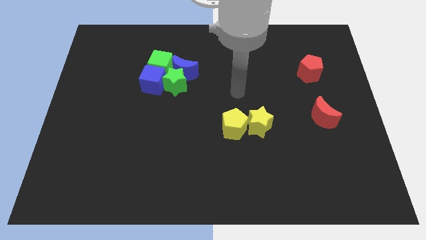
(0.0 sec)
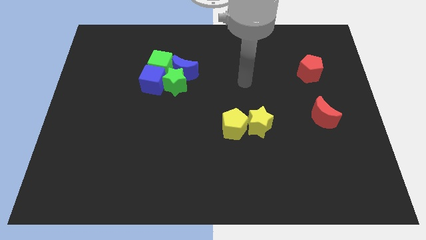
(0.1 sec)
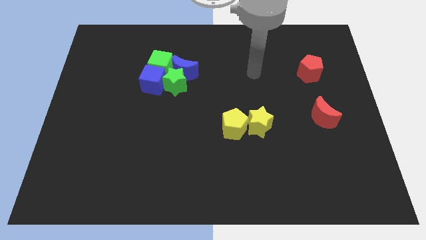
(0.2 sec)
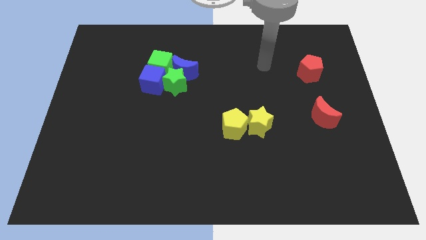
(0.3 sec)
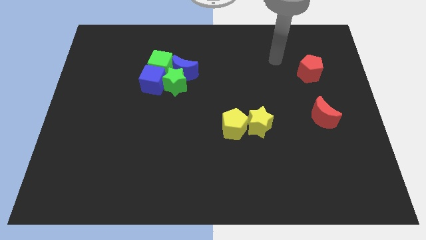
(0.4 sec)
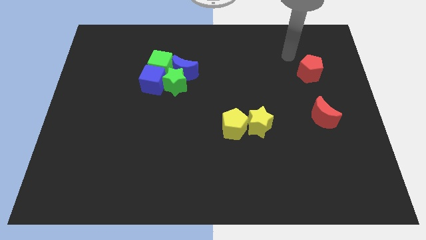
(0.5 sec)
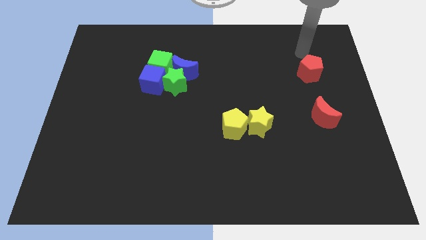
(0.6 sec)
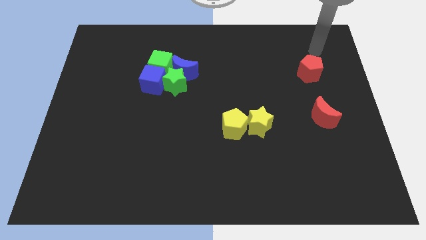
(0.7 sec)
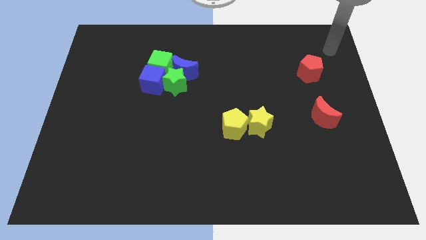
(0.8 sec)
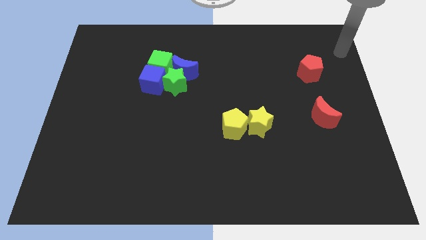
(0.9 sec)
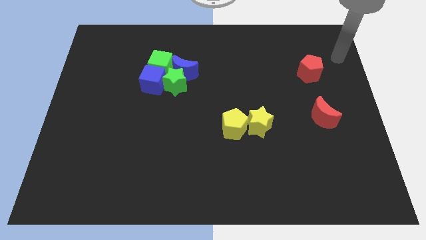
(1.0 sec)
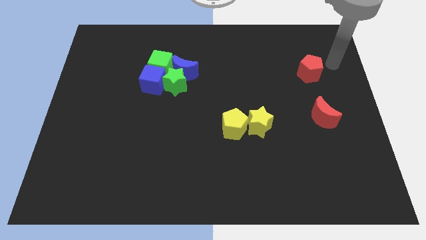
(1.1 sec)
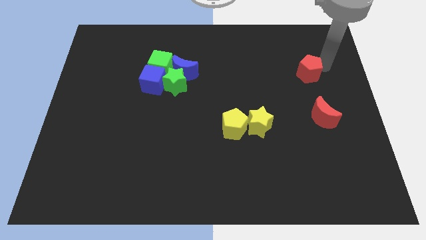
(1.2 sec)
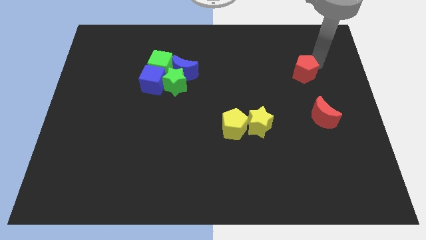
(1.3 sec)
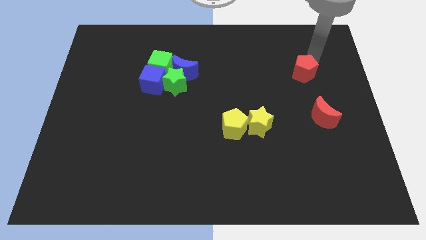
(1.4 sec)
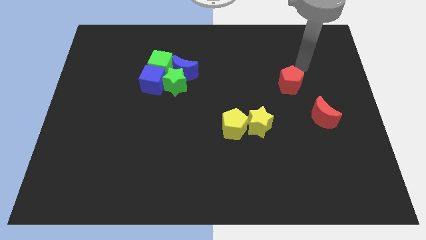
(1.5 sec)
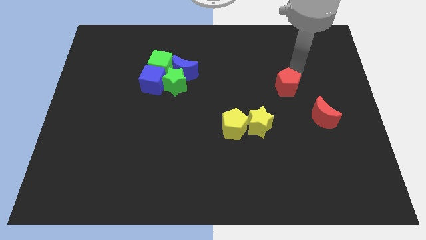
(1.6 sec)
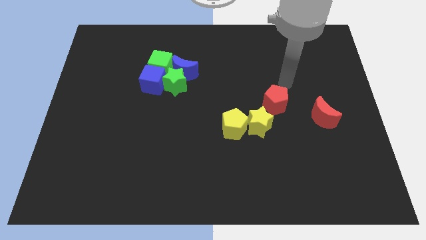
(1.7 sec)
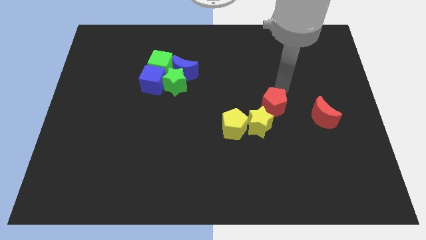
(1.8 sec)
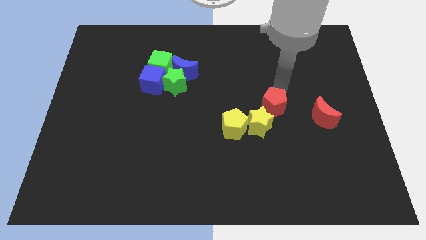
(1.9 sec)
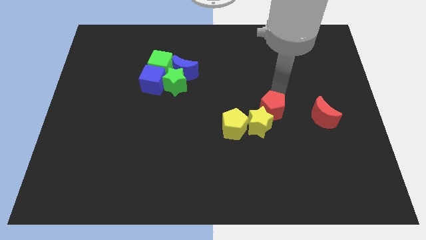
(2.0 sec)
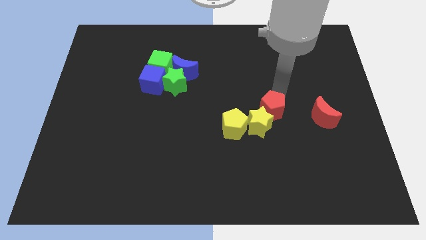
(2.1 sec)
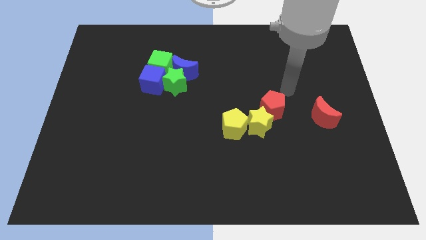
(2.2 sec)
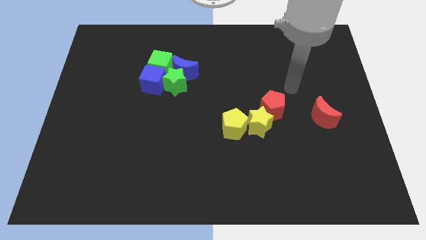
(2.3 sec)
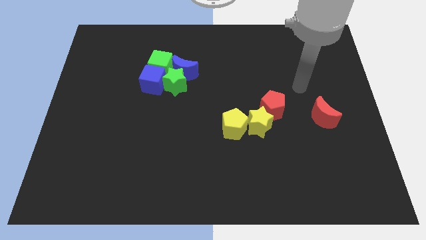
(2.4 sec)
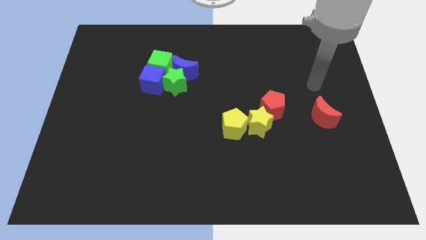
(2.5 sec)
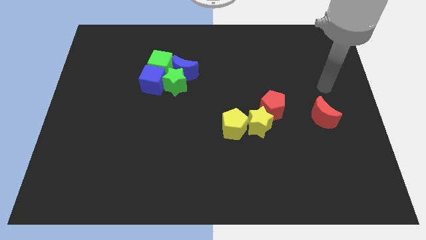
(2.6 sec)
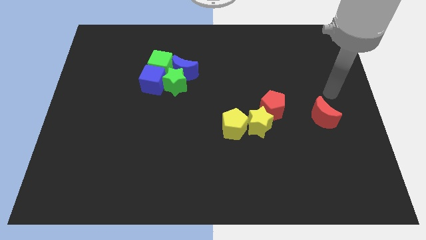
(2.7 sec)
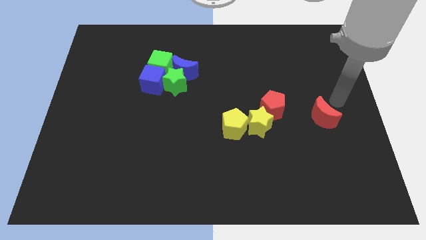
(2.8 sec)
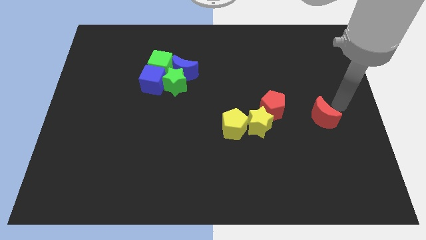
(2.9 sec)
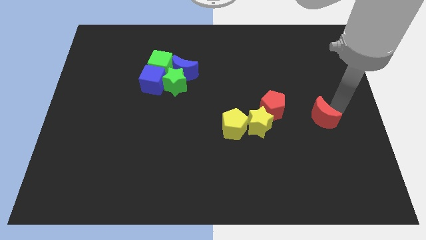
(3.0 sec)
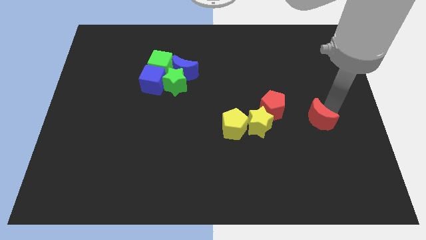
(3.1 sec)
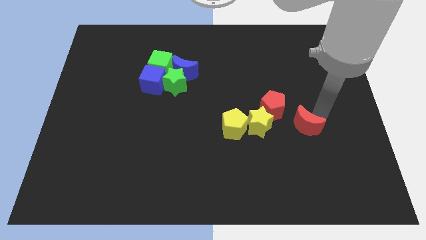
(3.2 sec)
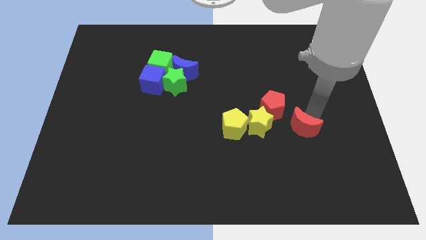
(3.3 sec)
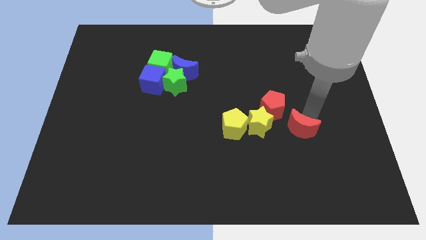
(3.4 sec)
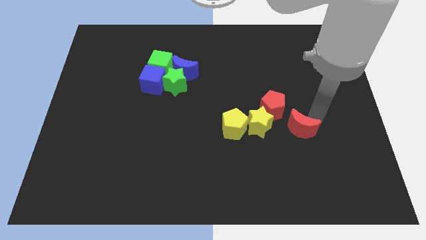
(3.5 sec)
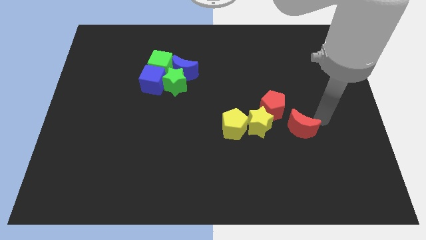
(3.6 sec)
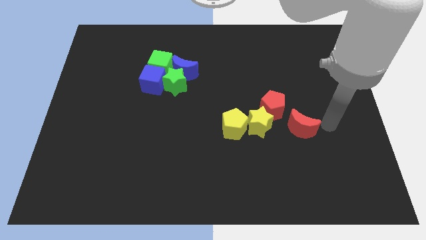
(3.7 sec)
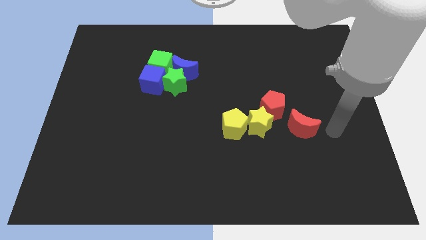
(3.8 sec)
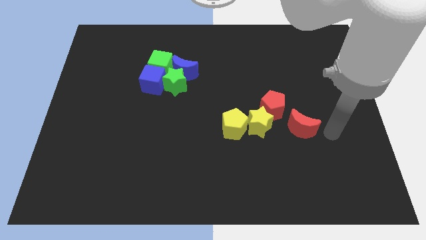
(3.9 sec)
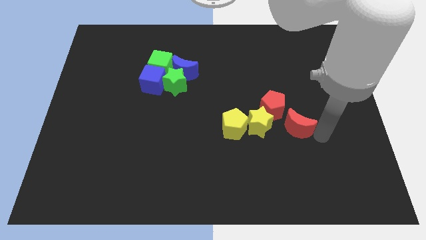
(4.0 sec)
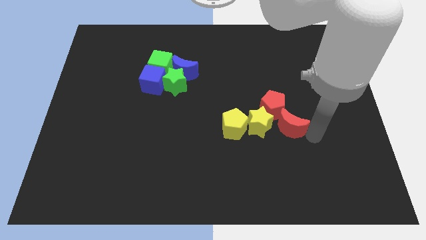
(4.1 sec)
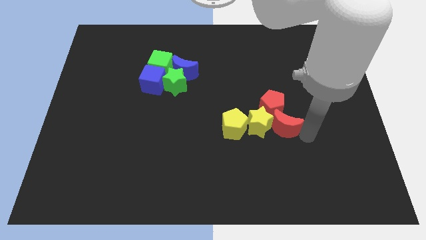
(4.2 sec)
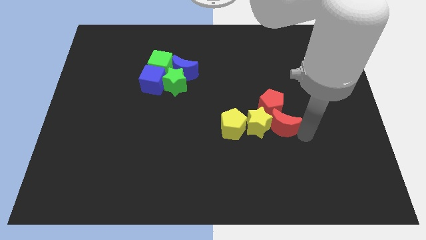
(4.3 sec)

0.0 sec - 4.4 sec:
slide the red crescent below to the red pentagon

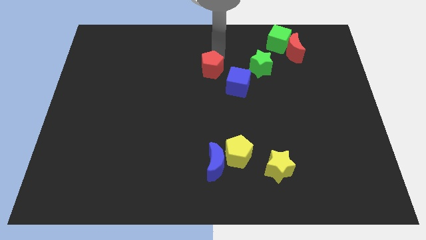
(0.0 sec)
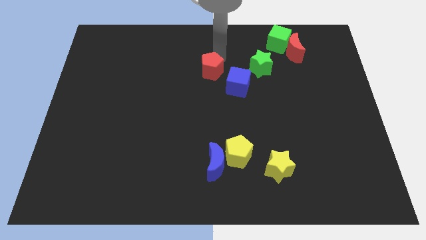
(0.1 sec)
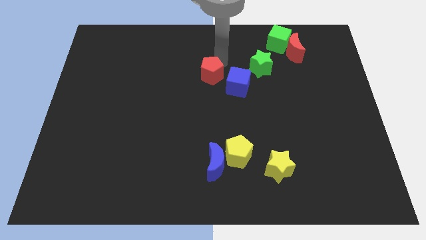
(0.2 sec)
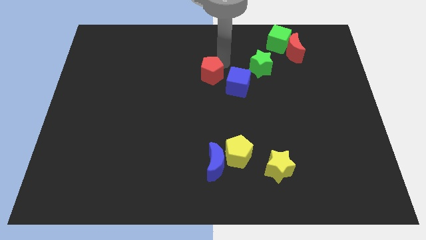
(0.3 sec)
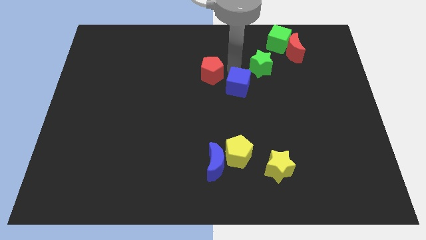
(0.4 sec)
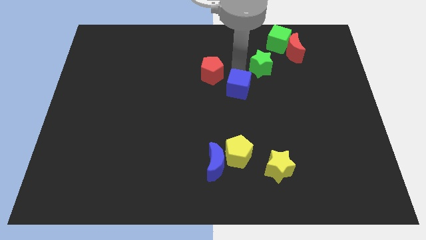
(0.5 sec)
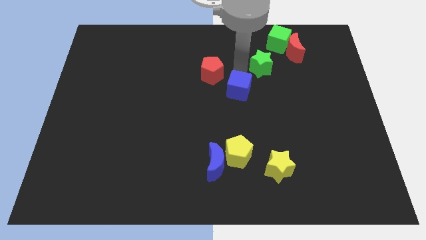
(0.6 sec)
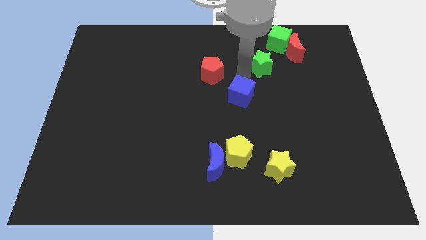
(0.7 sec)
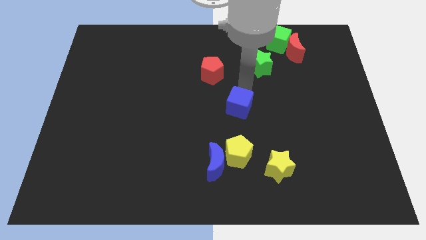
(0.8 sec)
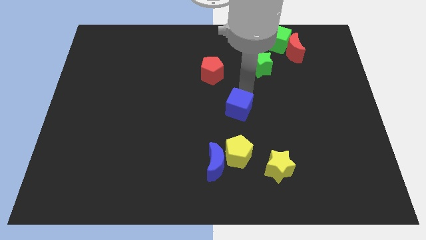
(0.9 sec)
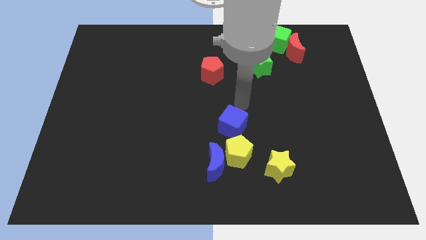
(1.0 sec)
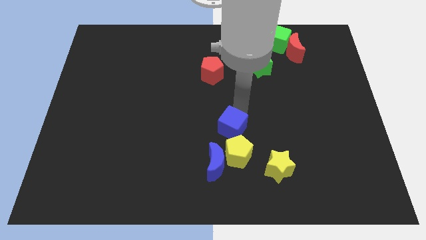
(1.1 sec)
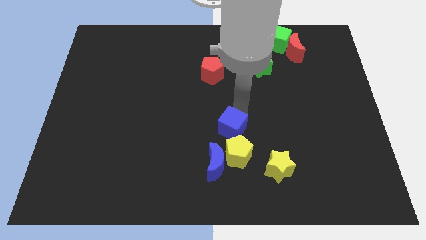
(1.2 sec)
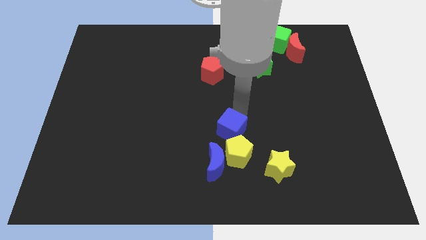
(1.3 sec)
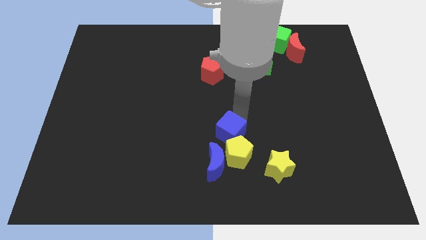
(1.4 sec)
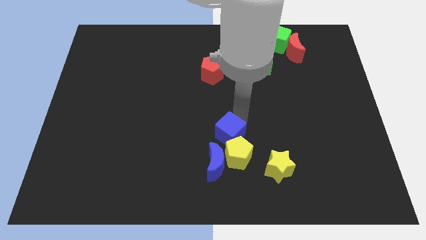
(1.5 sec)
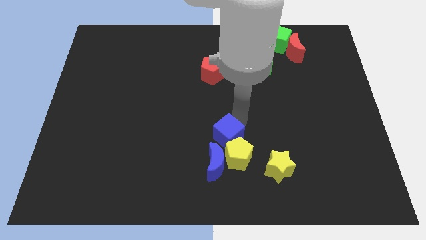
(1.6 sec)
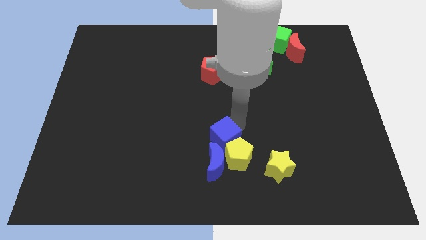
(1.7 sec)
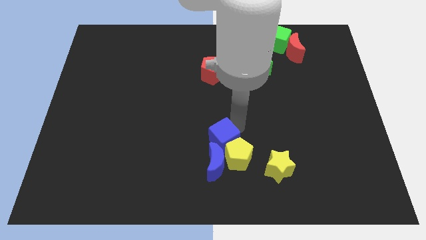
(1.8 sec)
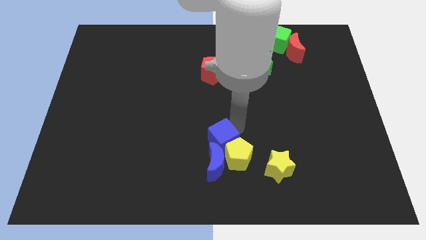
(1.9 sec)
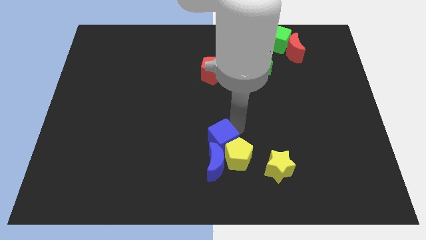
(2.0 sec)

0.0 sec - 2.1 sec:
place blue cube into blue moon and yellow pentagon

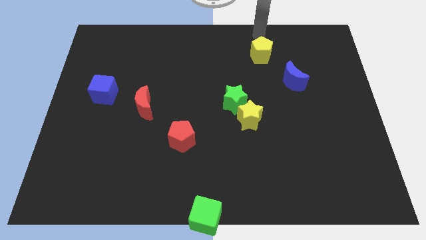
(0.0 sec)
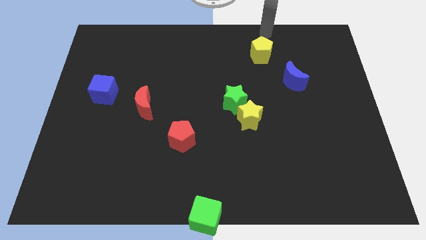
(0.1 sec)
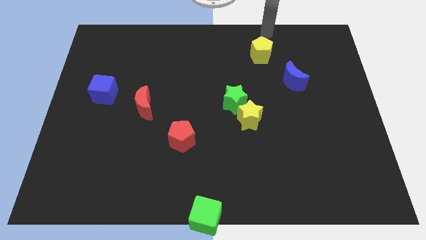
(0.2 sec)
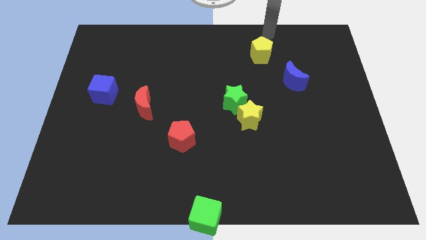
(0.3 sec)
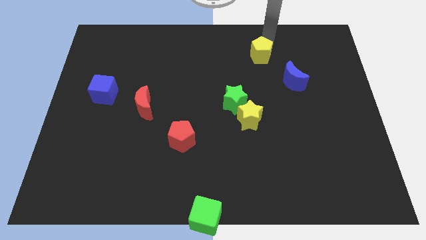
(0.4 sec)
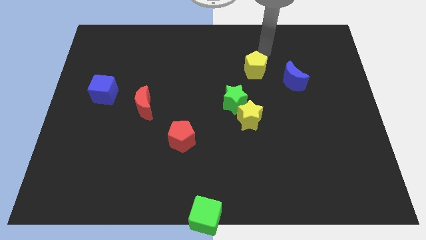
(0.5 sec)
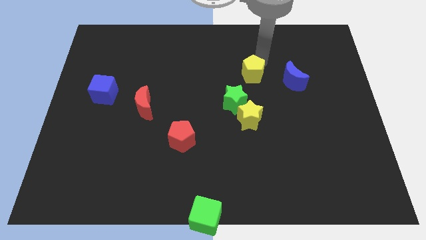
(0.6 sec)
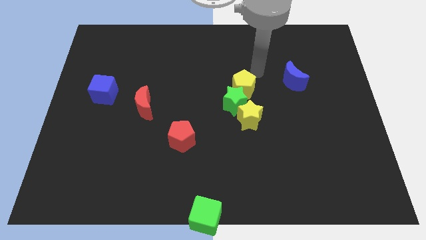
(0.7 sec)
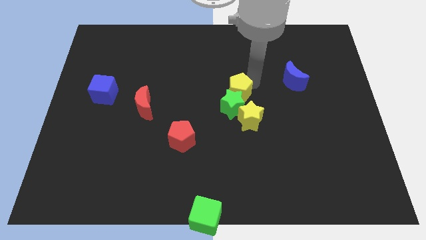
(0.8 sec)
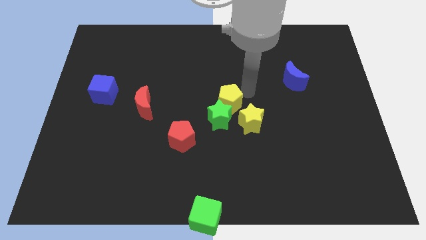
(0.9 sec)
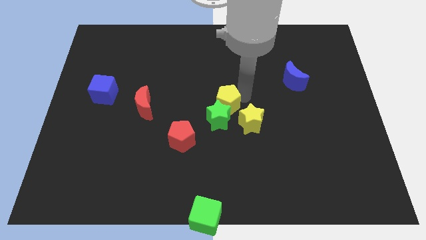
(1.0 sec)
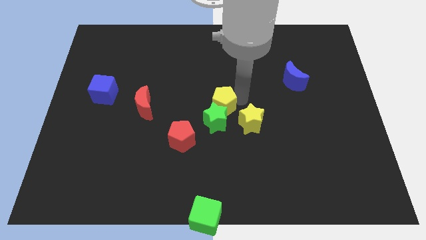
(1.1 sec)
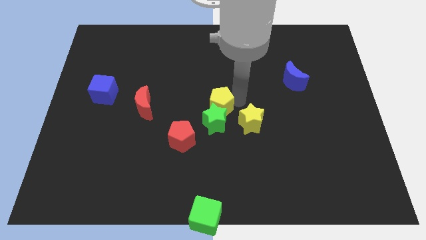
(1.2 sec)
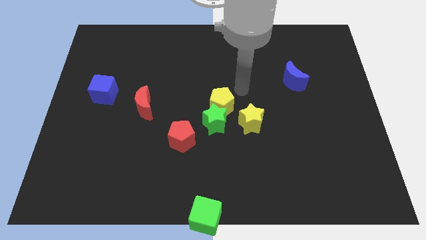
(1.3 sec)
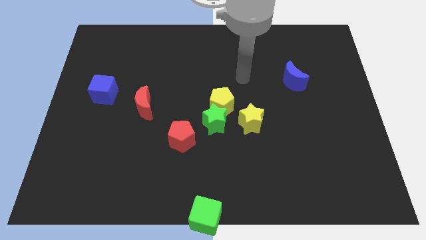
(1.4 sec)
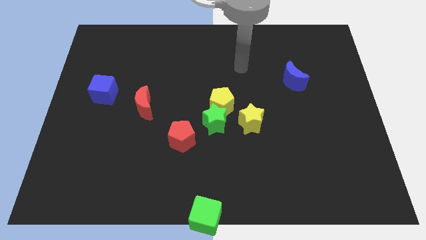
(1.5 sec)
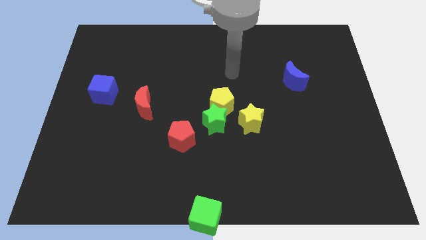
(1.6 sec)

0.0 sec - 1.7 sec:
move the yellow pentagon into the green star

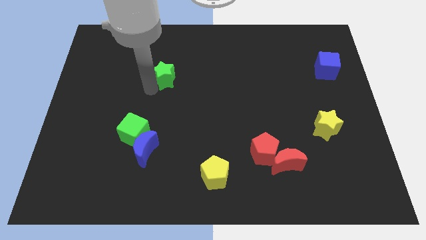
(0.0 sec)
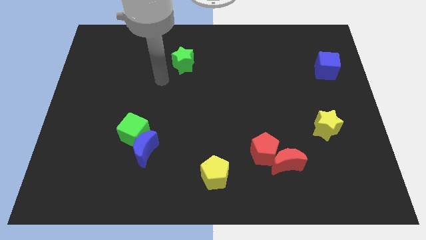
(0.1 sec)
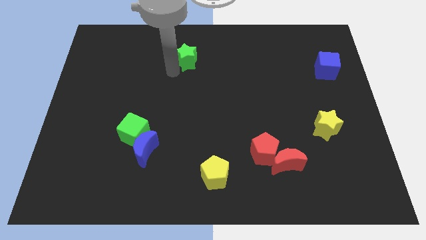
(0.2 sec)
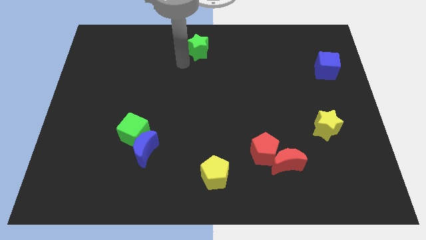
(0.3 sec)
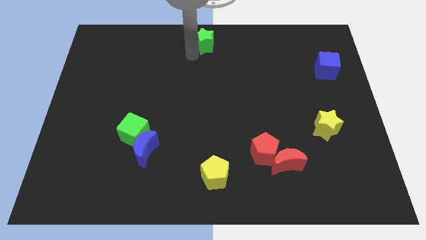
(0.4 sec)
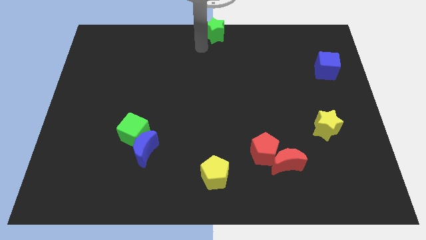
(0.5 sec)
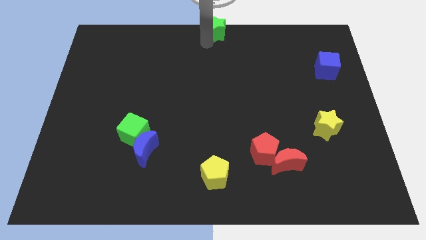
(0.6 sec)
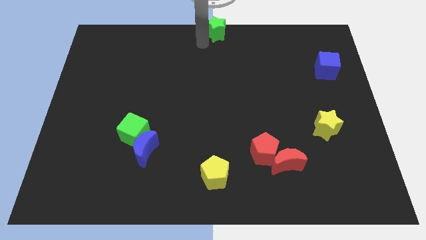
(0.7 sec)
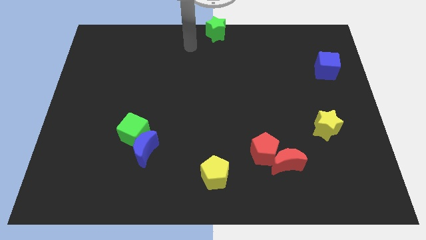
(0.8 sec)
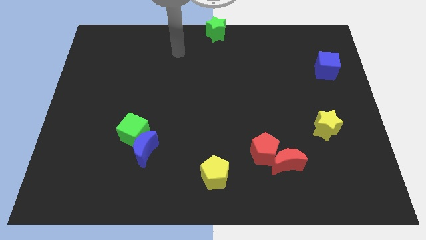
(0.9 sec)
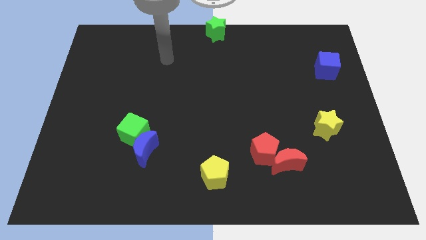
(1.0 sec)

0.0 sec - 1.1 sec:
place the green star to the top center
